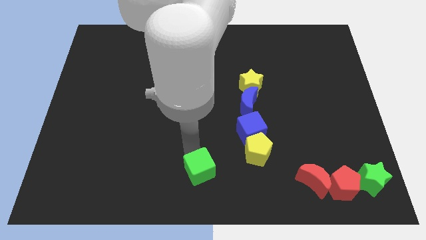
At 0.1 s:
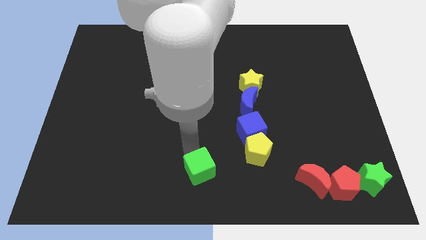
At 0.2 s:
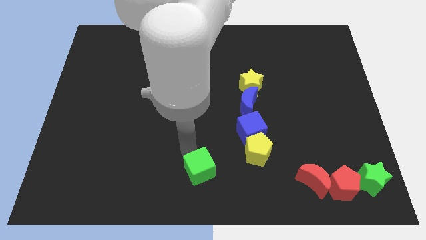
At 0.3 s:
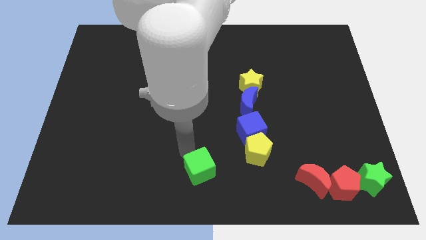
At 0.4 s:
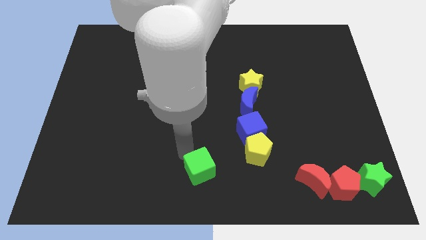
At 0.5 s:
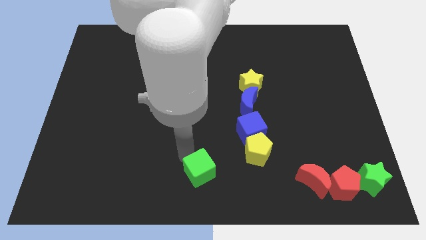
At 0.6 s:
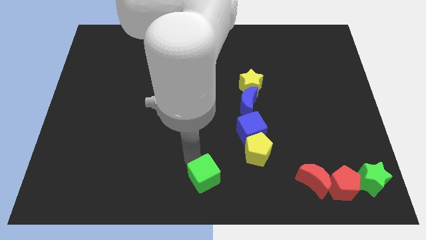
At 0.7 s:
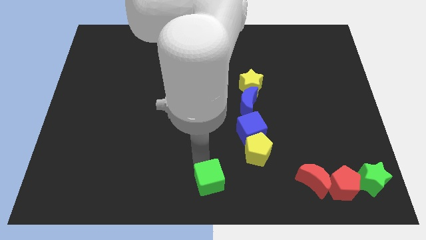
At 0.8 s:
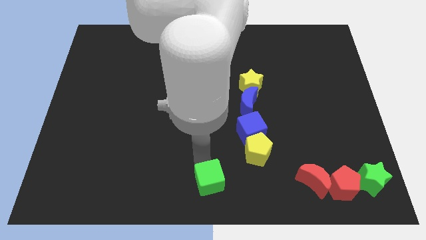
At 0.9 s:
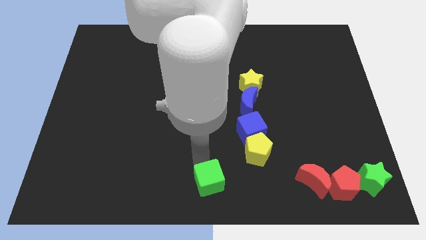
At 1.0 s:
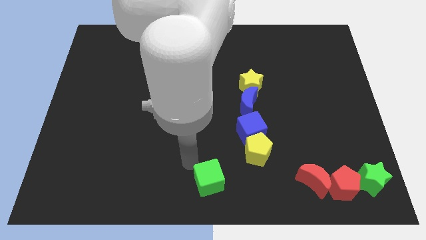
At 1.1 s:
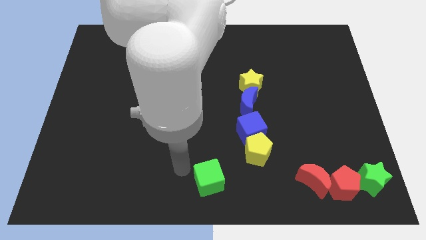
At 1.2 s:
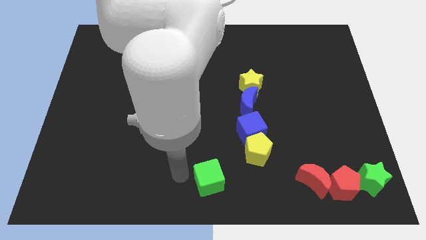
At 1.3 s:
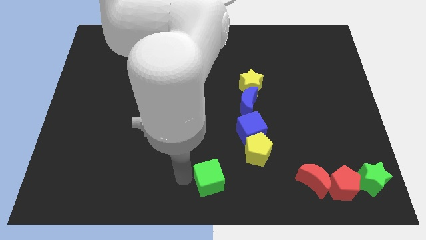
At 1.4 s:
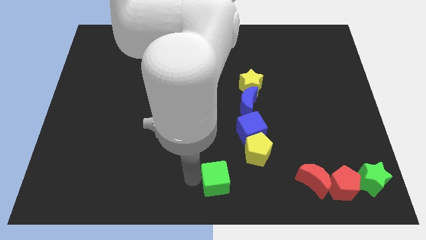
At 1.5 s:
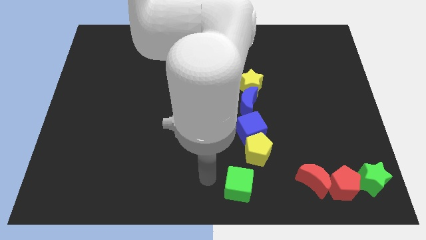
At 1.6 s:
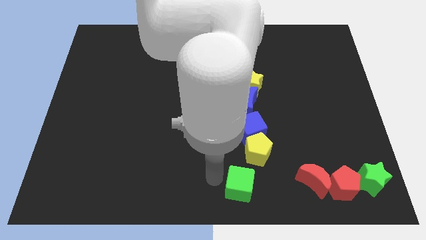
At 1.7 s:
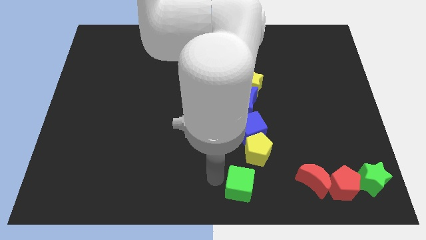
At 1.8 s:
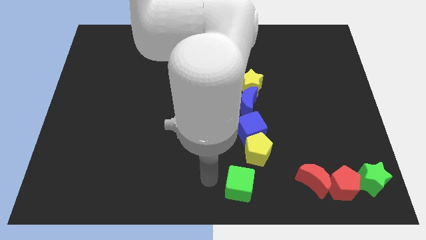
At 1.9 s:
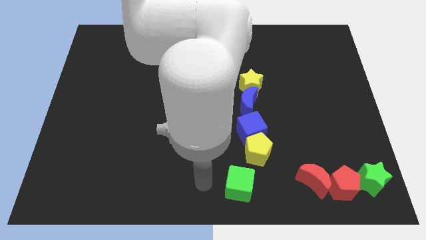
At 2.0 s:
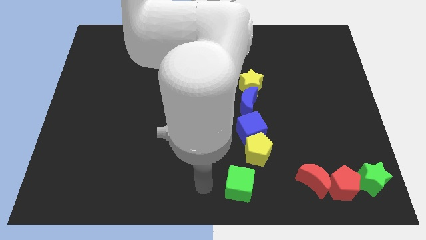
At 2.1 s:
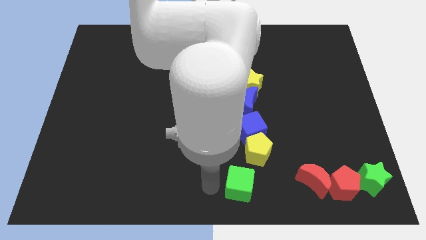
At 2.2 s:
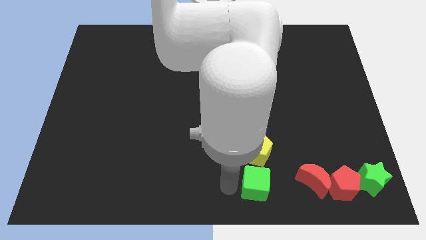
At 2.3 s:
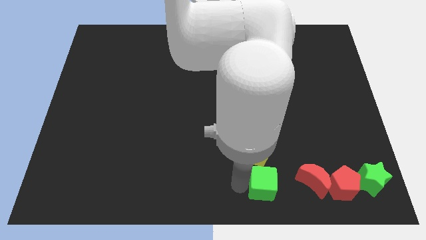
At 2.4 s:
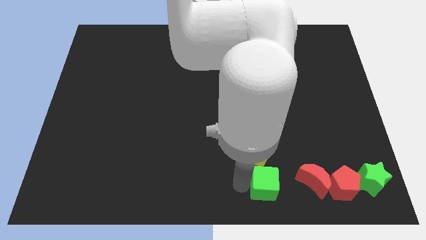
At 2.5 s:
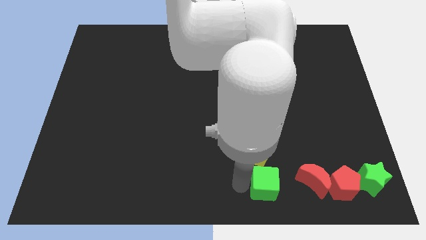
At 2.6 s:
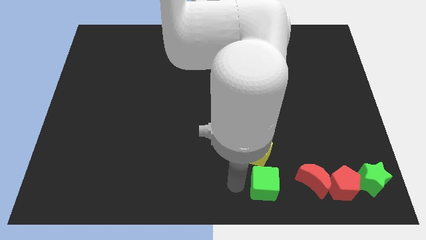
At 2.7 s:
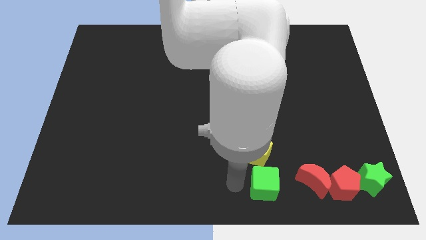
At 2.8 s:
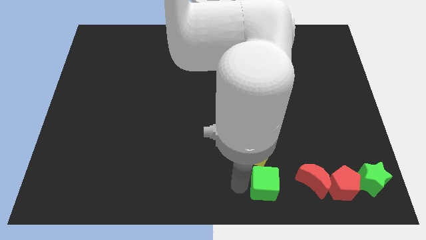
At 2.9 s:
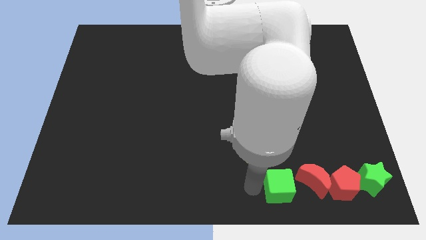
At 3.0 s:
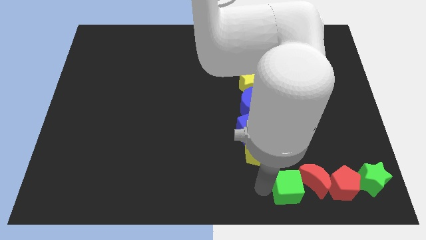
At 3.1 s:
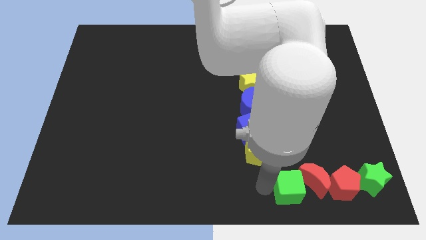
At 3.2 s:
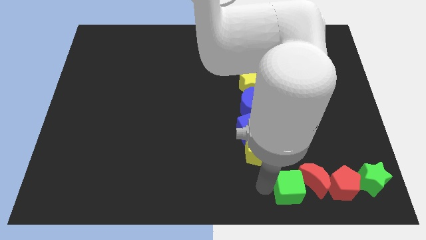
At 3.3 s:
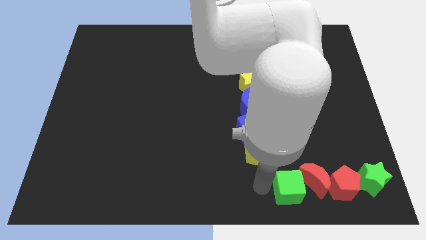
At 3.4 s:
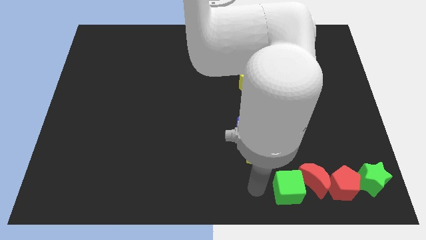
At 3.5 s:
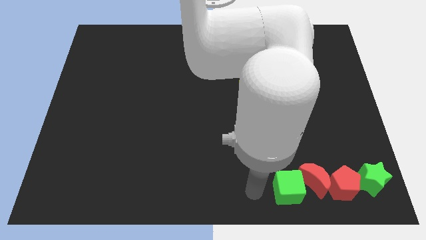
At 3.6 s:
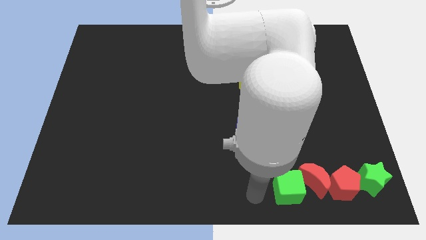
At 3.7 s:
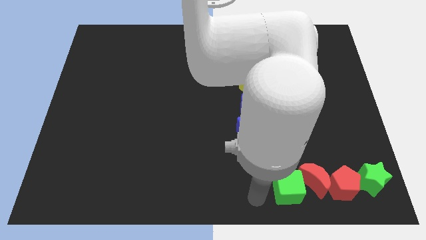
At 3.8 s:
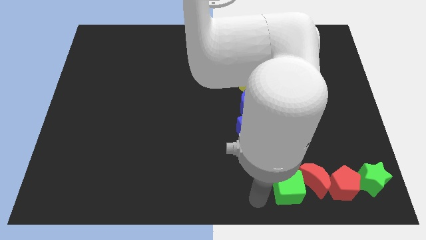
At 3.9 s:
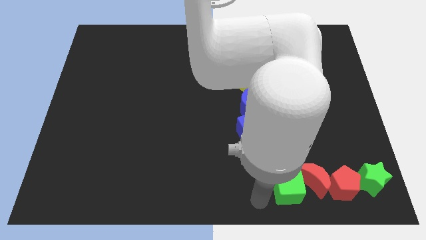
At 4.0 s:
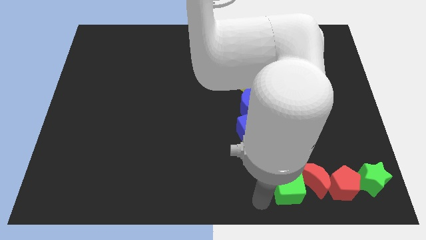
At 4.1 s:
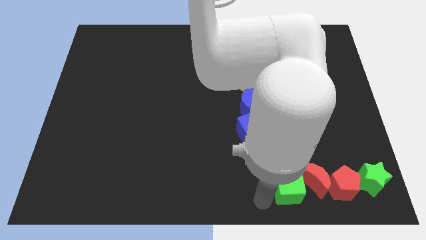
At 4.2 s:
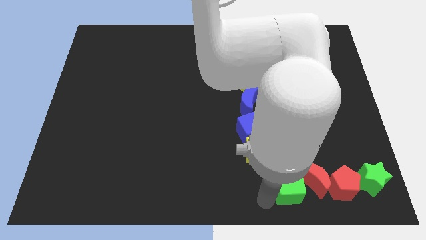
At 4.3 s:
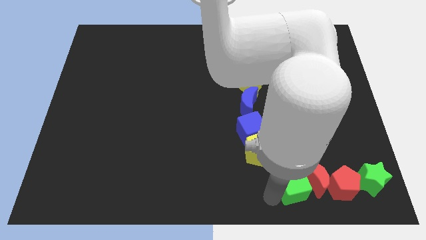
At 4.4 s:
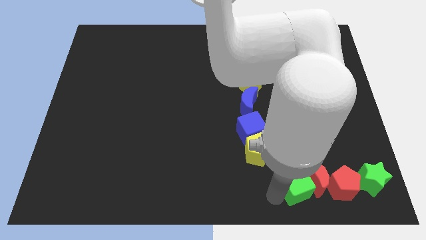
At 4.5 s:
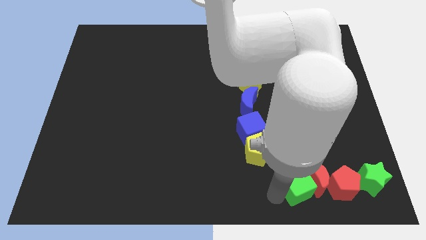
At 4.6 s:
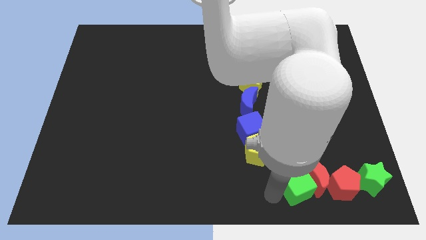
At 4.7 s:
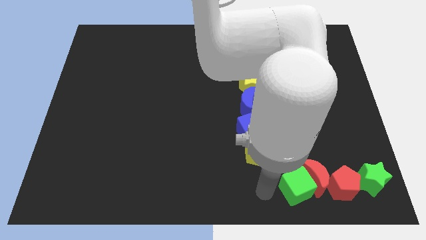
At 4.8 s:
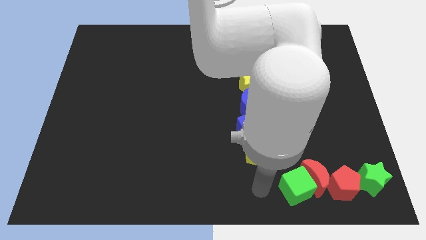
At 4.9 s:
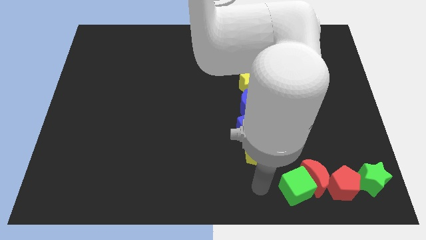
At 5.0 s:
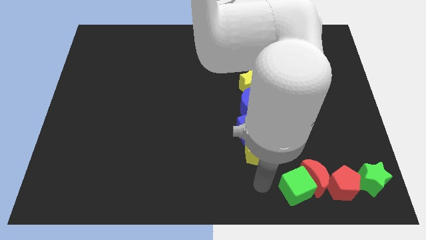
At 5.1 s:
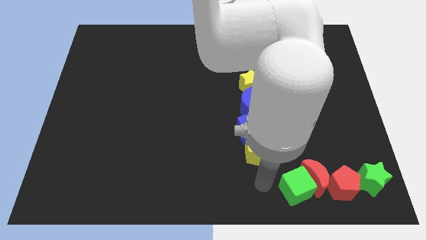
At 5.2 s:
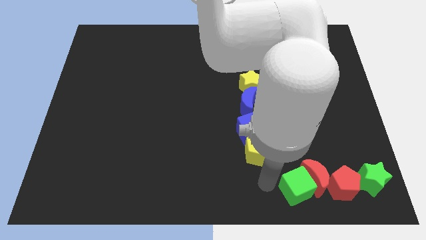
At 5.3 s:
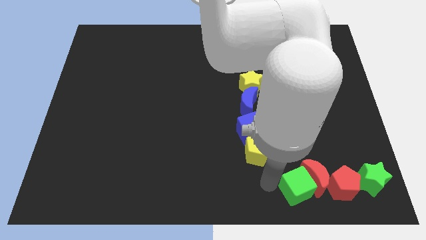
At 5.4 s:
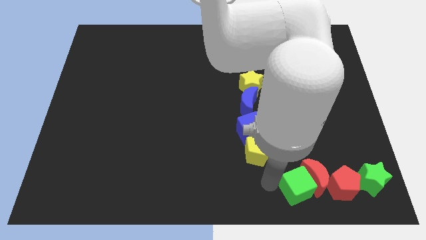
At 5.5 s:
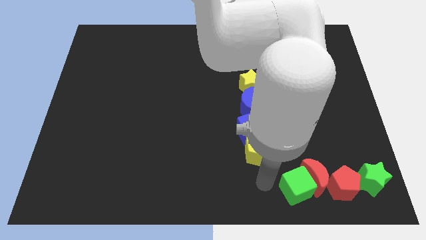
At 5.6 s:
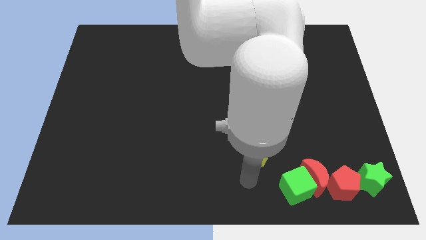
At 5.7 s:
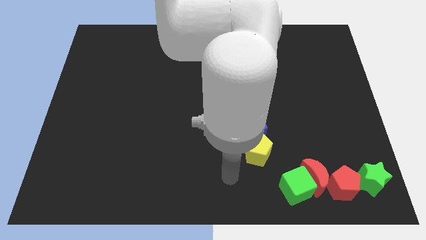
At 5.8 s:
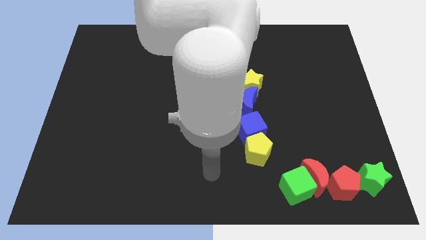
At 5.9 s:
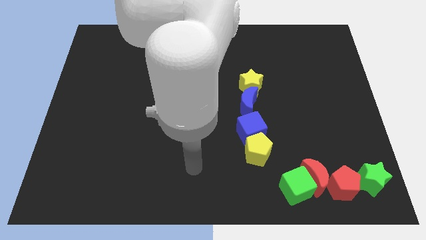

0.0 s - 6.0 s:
push the green cube left to the red moon to make a row

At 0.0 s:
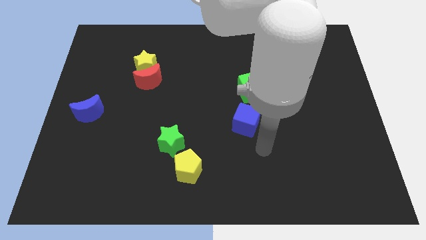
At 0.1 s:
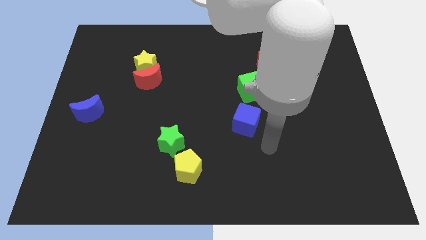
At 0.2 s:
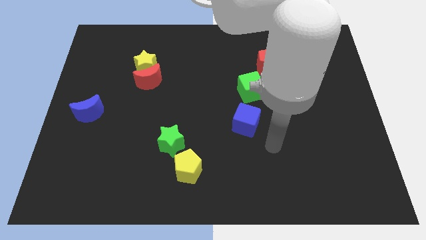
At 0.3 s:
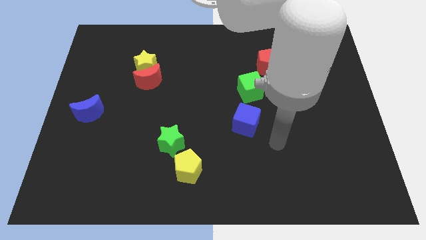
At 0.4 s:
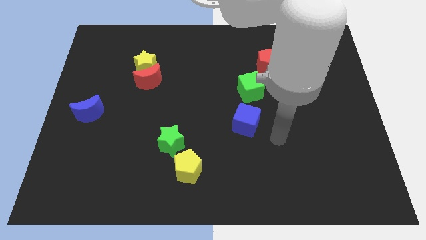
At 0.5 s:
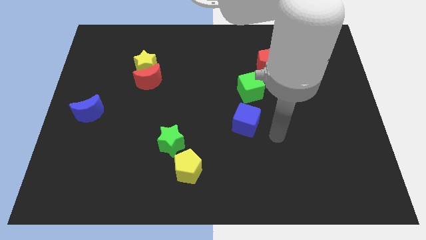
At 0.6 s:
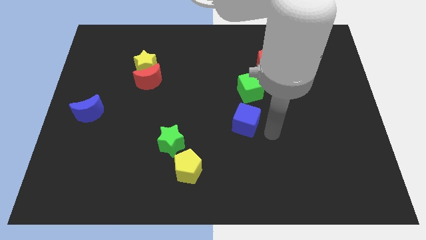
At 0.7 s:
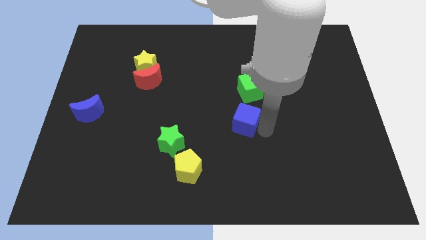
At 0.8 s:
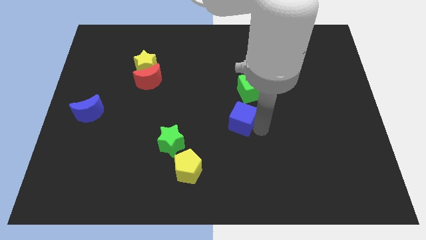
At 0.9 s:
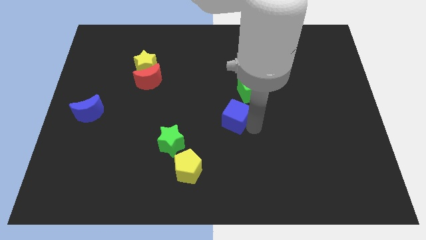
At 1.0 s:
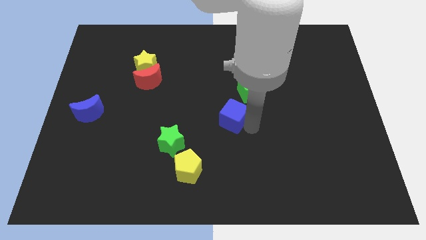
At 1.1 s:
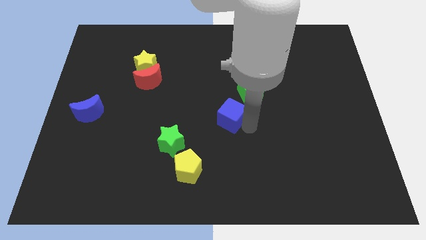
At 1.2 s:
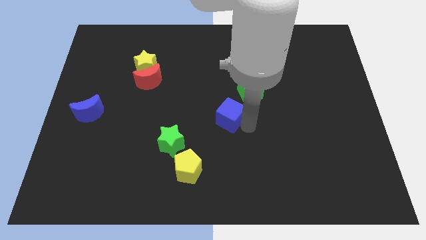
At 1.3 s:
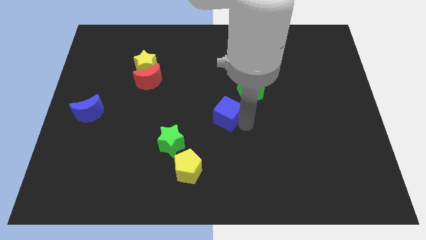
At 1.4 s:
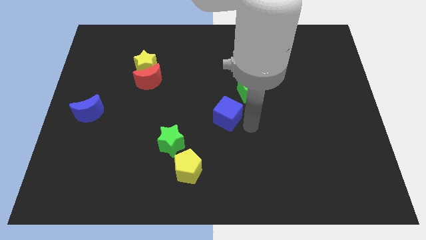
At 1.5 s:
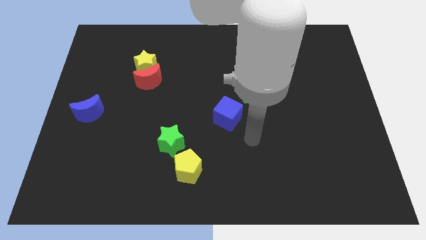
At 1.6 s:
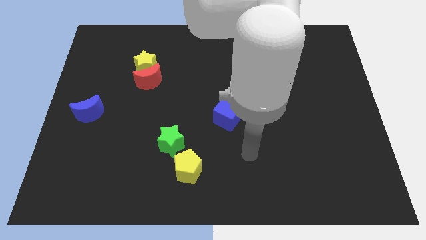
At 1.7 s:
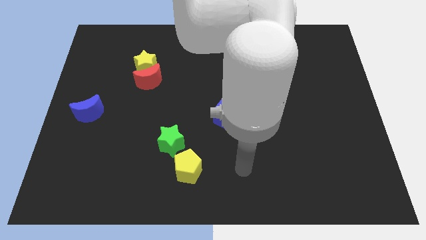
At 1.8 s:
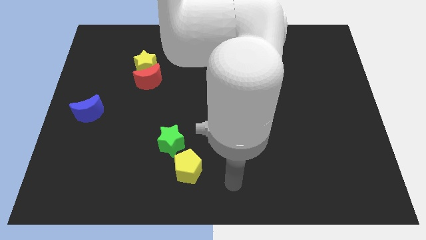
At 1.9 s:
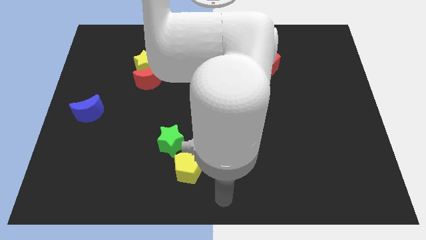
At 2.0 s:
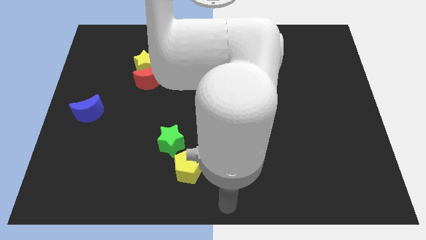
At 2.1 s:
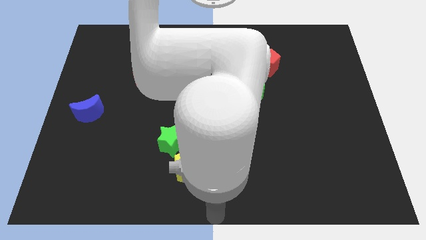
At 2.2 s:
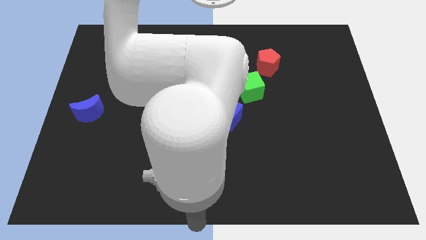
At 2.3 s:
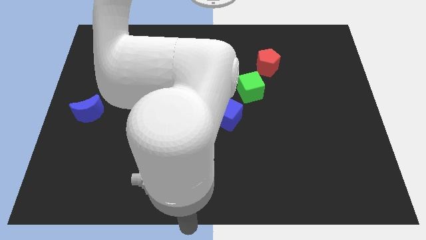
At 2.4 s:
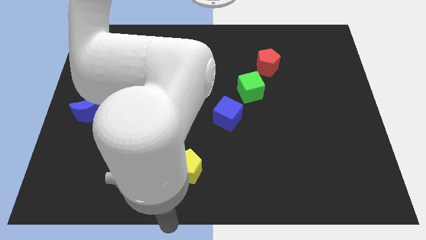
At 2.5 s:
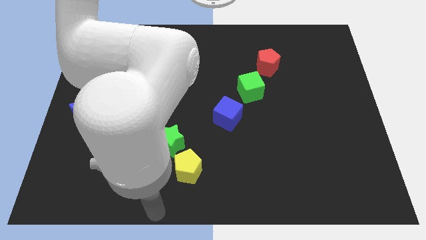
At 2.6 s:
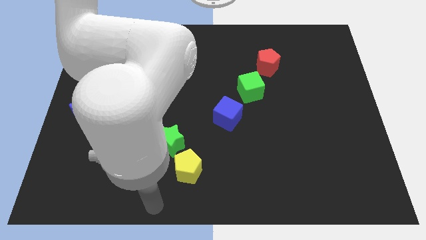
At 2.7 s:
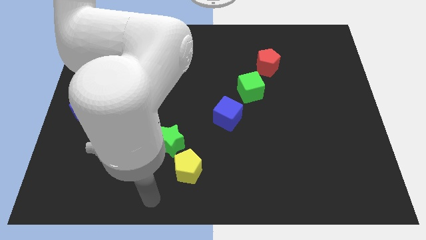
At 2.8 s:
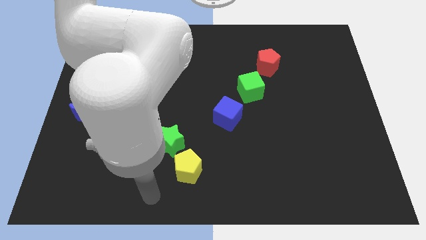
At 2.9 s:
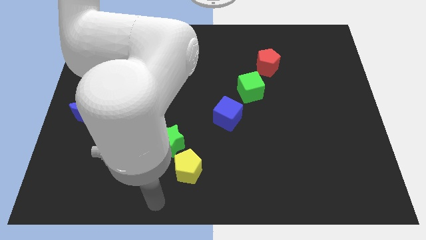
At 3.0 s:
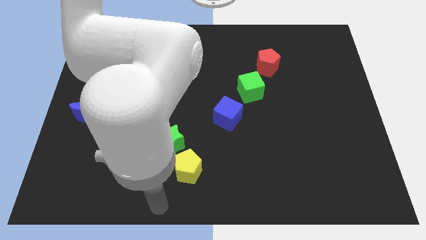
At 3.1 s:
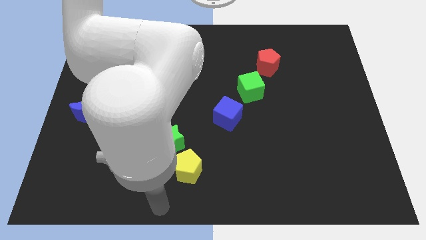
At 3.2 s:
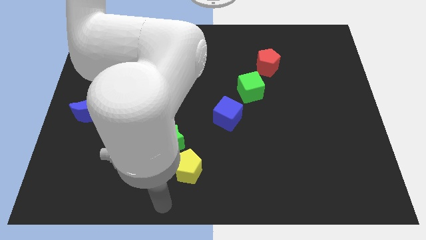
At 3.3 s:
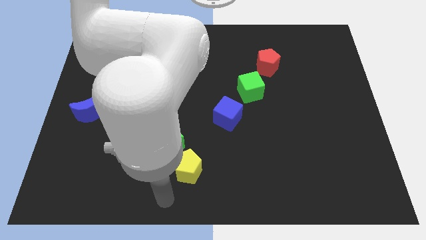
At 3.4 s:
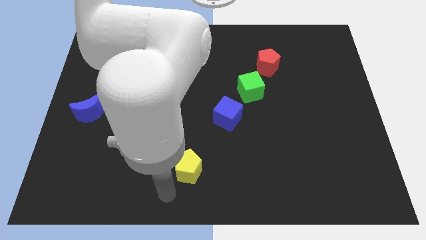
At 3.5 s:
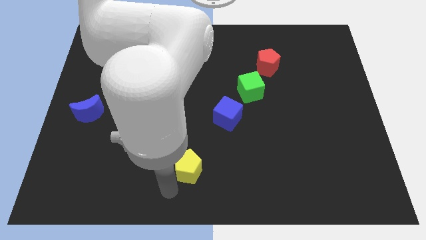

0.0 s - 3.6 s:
push the blue cube towards the center of the board
